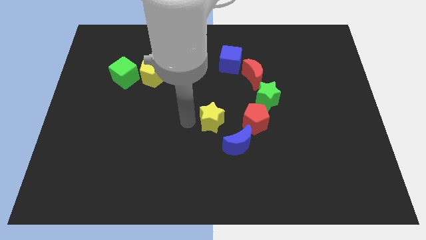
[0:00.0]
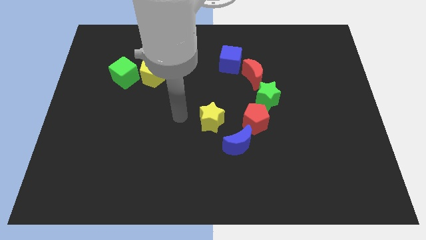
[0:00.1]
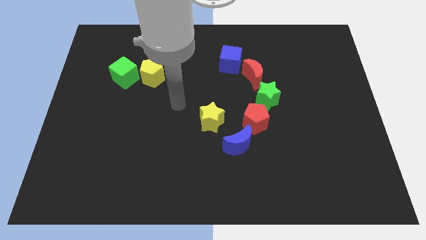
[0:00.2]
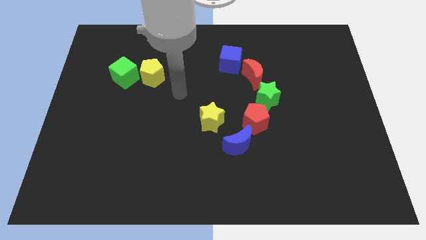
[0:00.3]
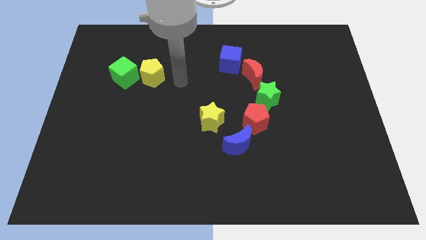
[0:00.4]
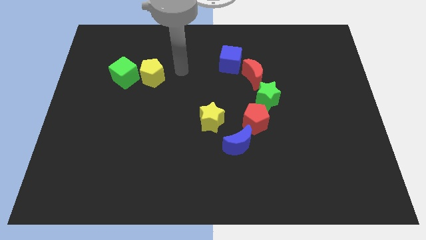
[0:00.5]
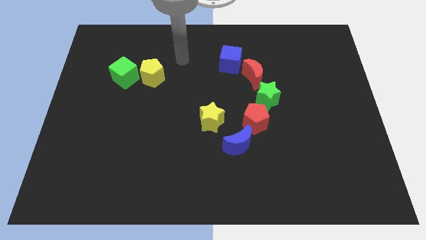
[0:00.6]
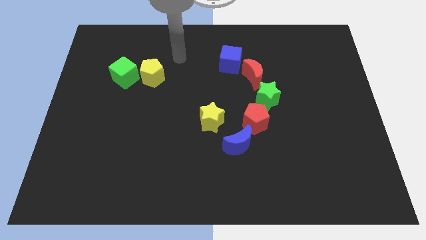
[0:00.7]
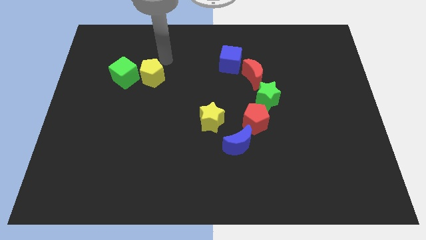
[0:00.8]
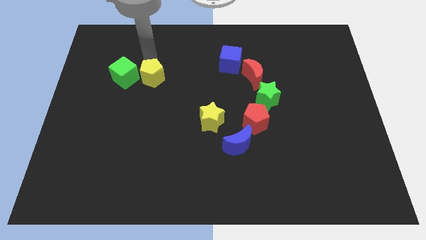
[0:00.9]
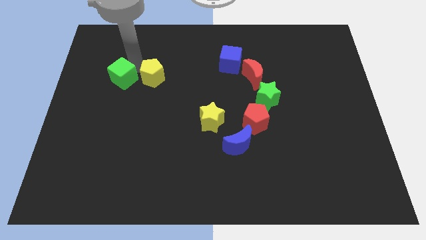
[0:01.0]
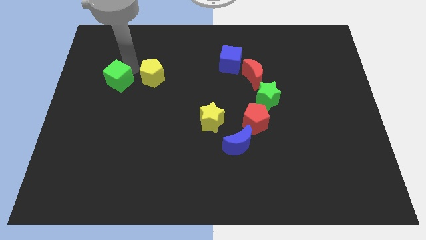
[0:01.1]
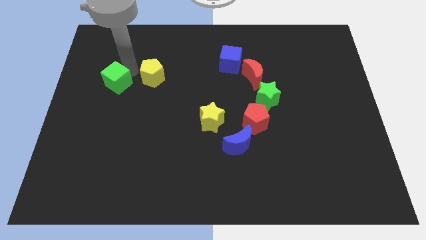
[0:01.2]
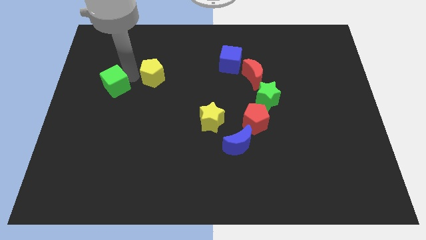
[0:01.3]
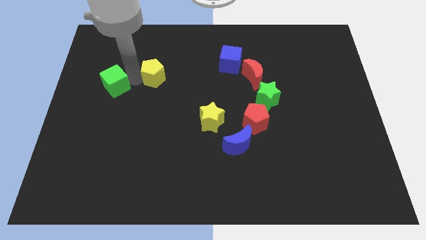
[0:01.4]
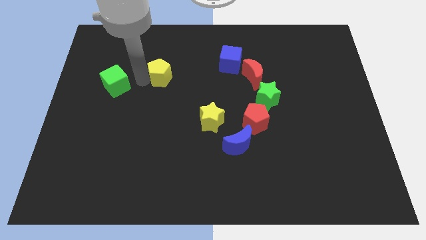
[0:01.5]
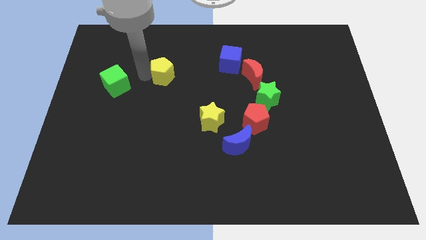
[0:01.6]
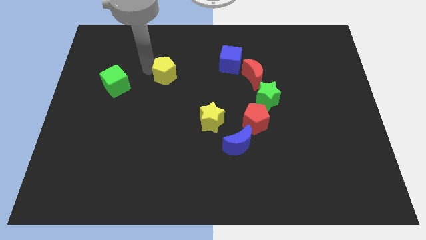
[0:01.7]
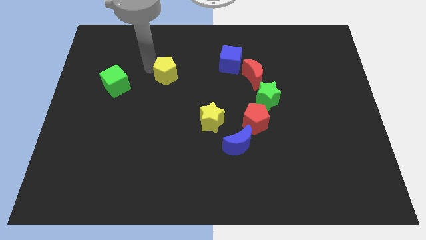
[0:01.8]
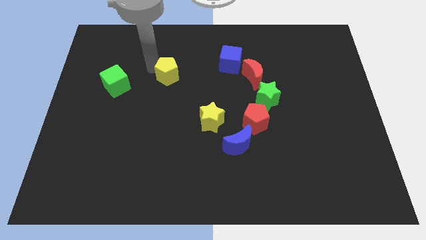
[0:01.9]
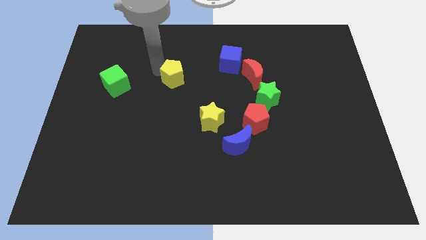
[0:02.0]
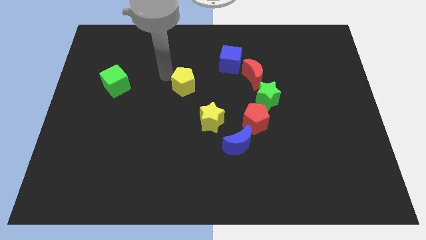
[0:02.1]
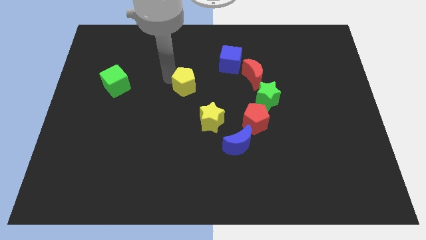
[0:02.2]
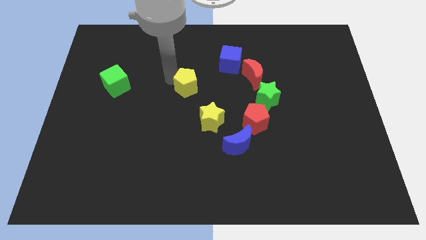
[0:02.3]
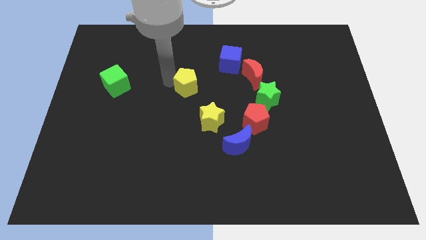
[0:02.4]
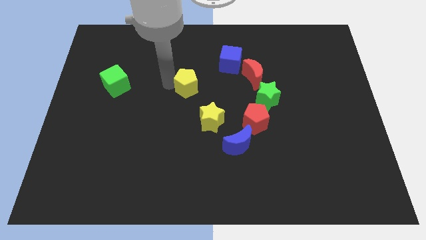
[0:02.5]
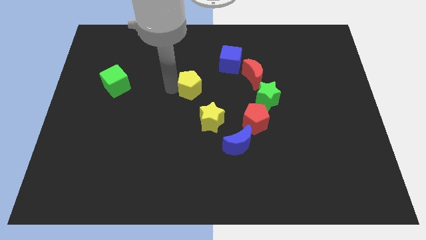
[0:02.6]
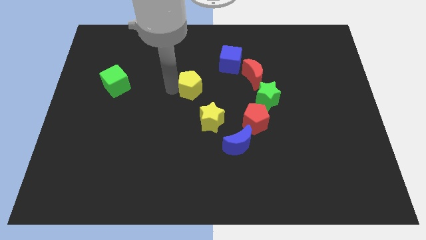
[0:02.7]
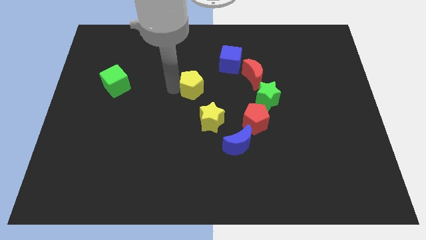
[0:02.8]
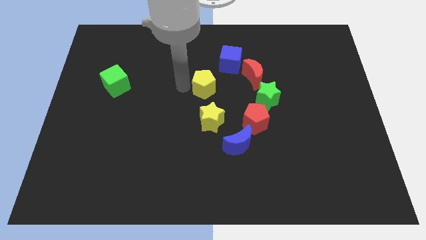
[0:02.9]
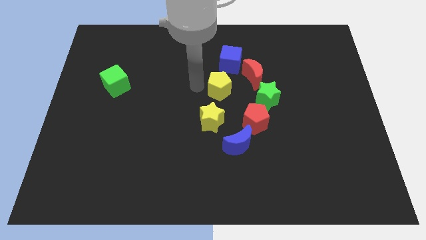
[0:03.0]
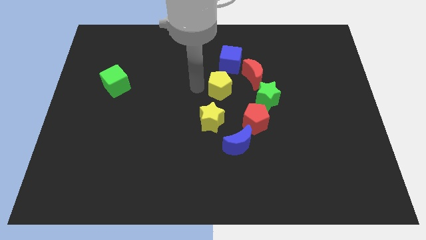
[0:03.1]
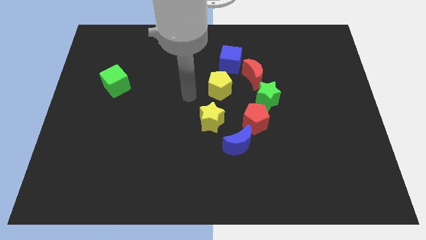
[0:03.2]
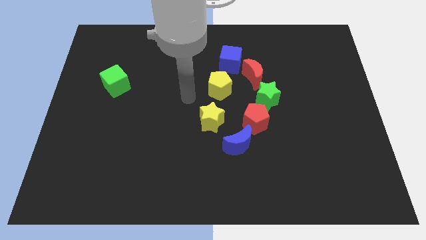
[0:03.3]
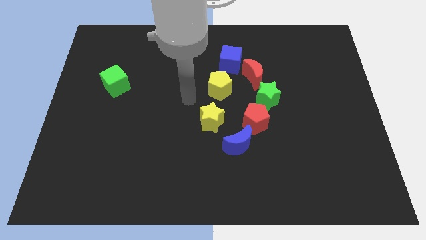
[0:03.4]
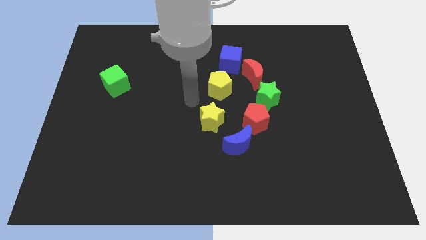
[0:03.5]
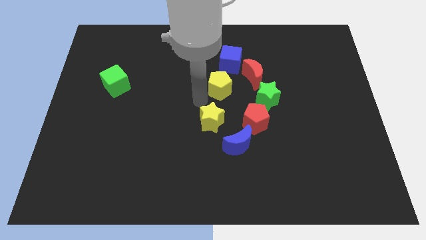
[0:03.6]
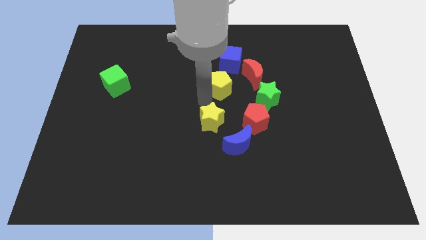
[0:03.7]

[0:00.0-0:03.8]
move the yellow pentagon to the top of the yellow star

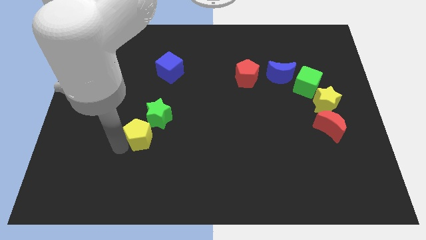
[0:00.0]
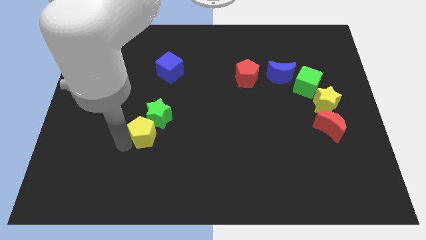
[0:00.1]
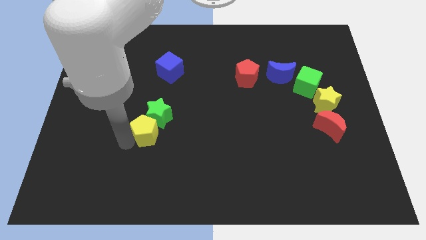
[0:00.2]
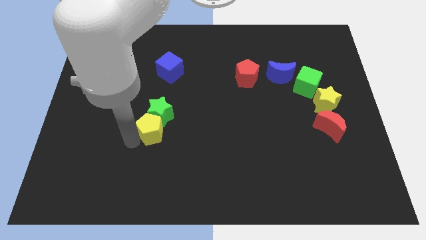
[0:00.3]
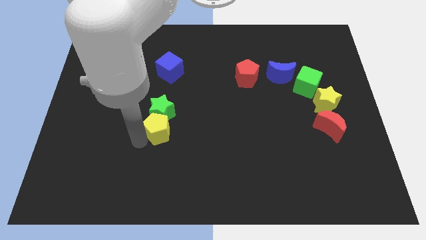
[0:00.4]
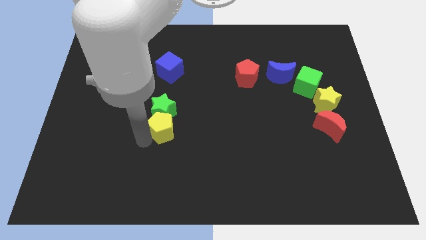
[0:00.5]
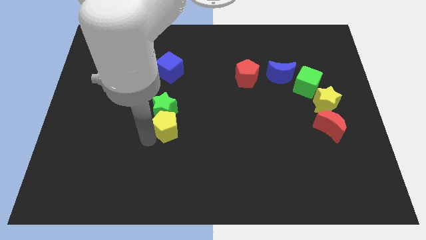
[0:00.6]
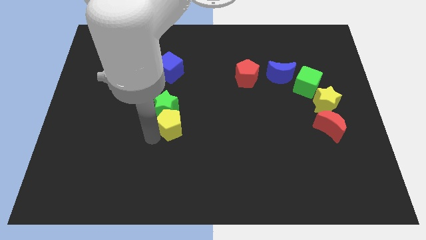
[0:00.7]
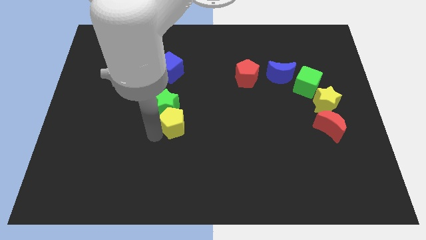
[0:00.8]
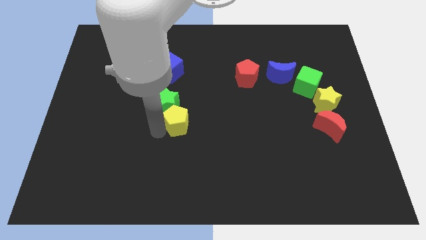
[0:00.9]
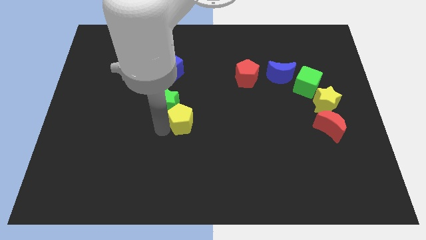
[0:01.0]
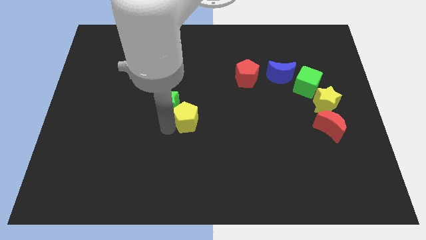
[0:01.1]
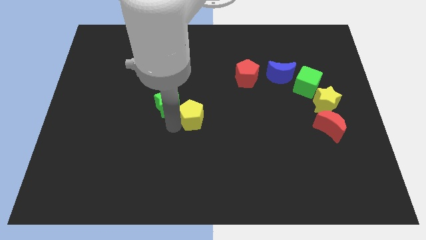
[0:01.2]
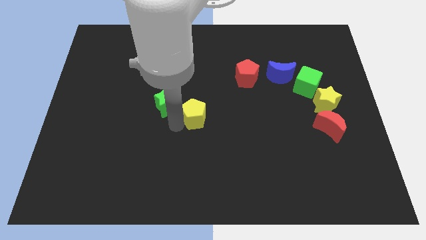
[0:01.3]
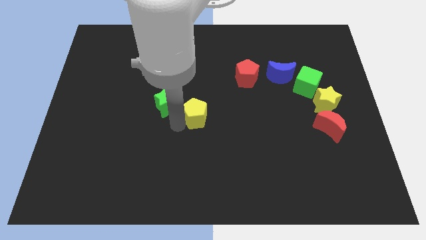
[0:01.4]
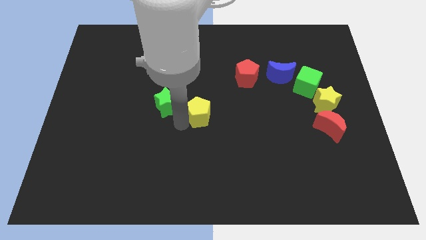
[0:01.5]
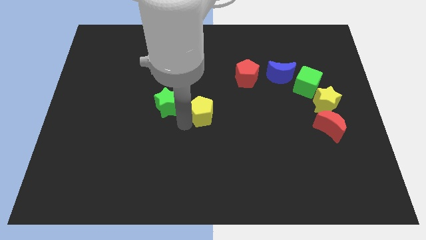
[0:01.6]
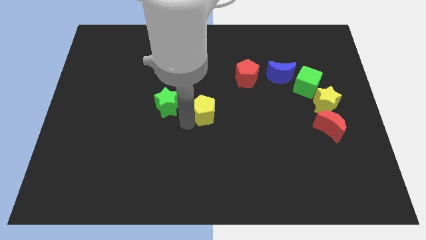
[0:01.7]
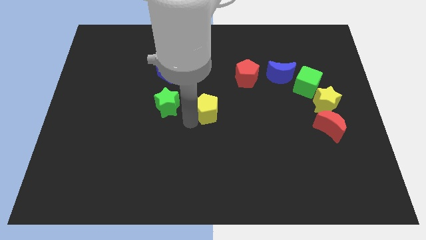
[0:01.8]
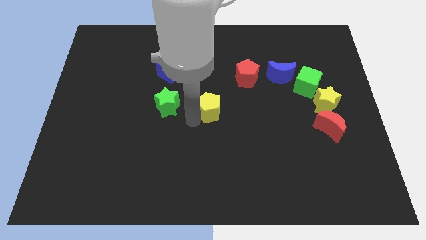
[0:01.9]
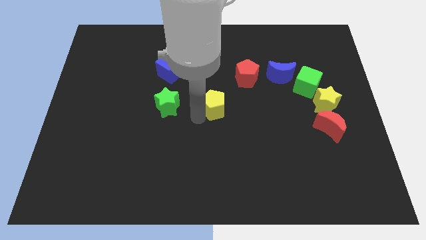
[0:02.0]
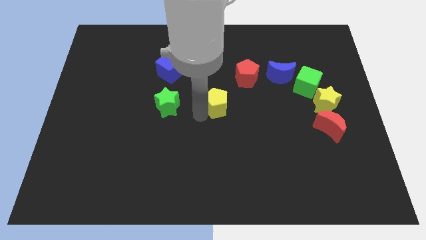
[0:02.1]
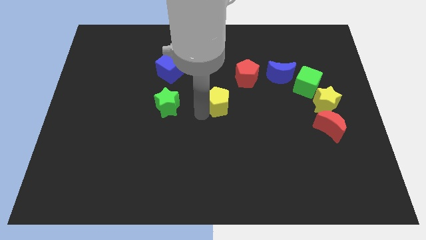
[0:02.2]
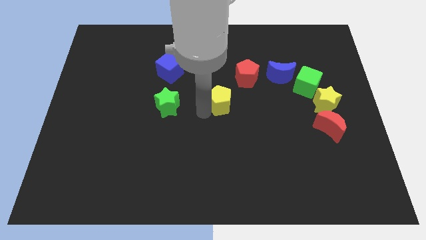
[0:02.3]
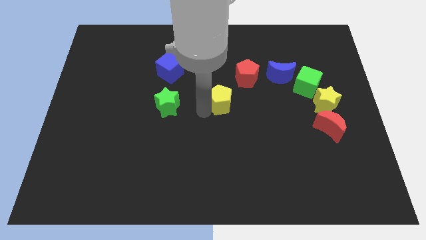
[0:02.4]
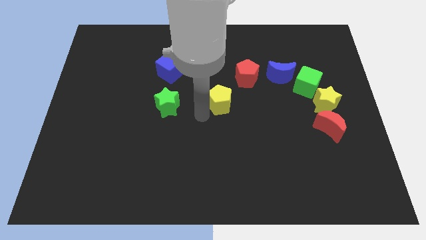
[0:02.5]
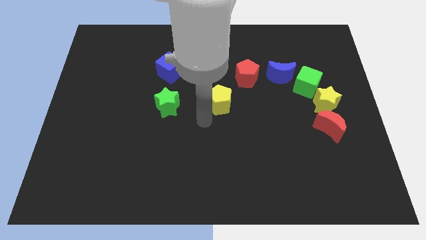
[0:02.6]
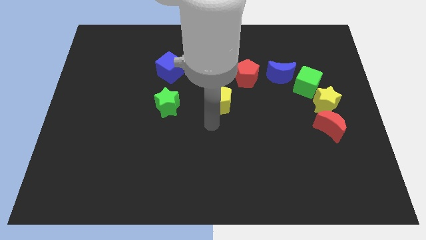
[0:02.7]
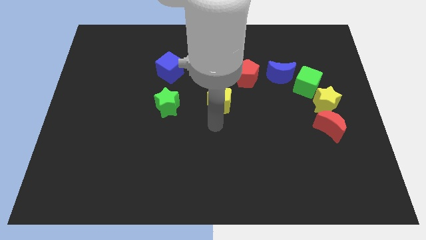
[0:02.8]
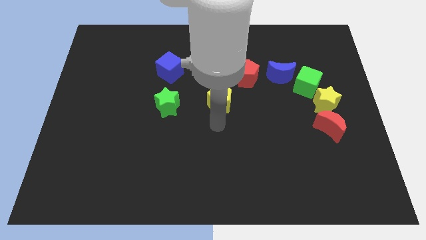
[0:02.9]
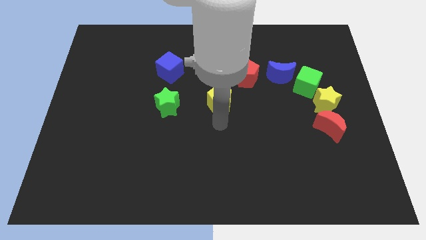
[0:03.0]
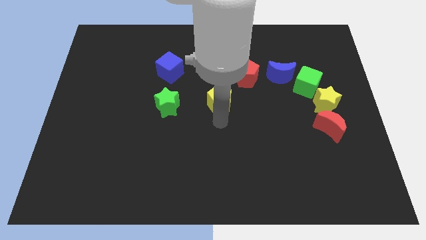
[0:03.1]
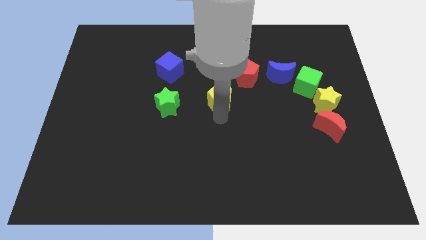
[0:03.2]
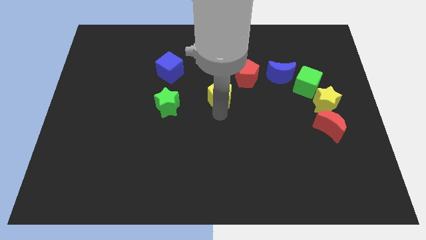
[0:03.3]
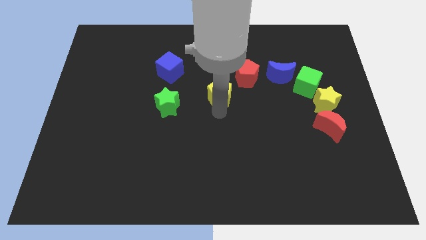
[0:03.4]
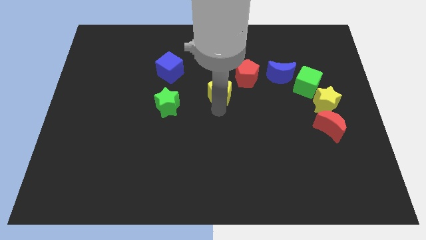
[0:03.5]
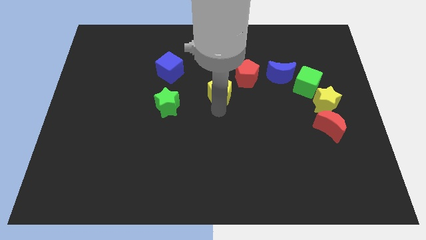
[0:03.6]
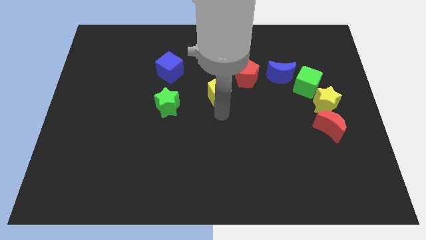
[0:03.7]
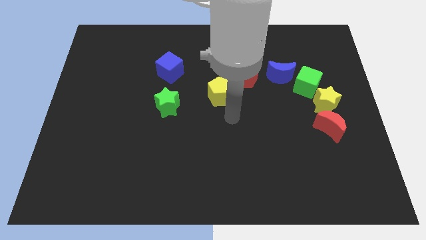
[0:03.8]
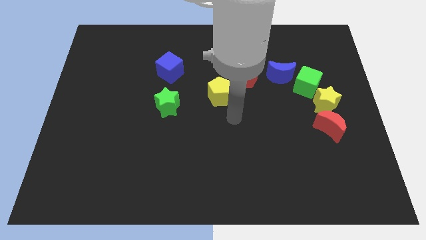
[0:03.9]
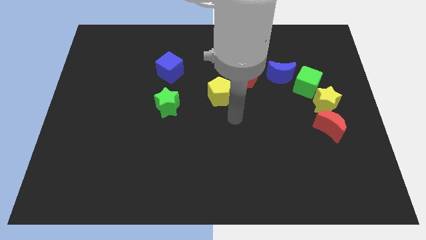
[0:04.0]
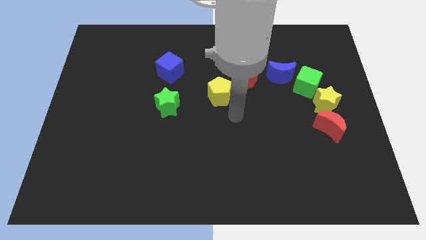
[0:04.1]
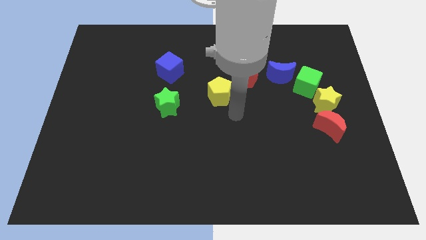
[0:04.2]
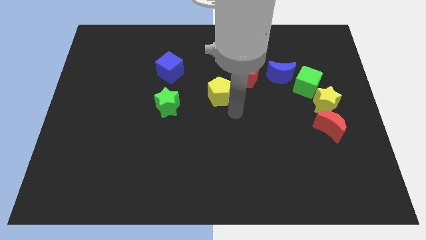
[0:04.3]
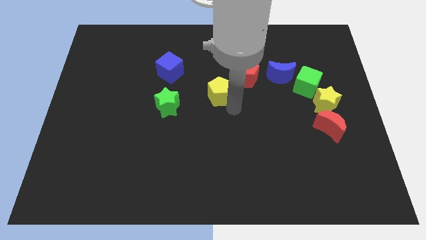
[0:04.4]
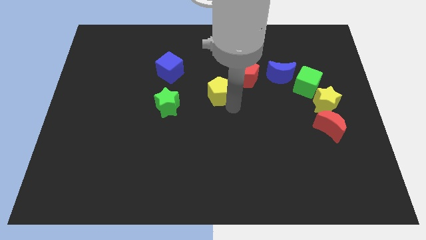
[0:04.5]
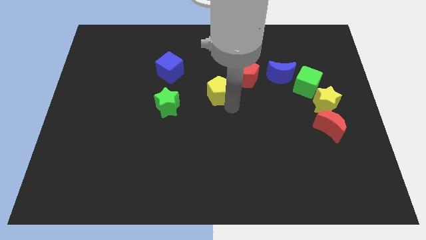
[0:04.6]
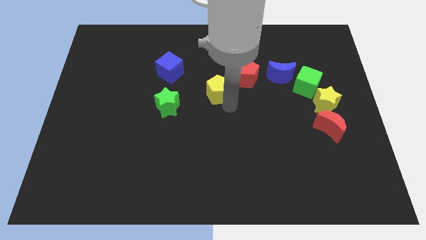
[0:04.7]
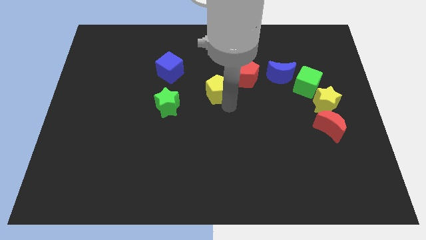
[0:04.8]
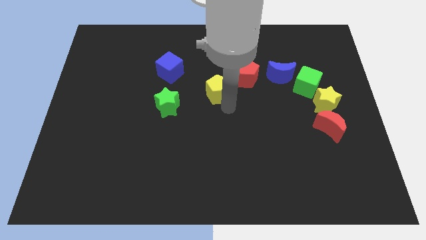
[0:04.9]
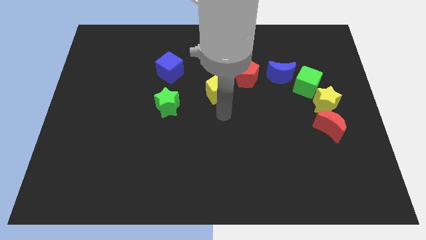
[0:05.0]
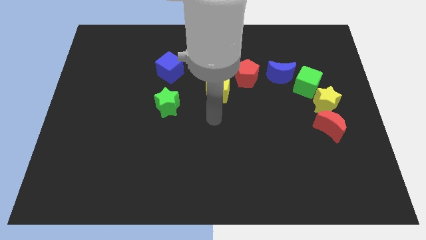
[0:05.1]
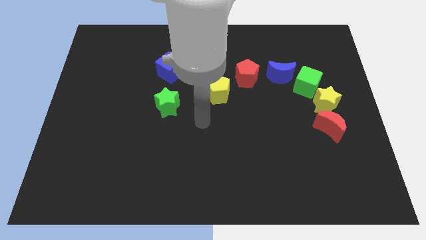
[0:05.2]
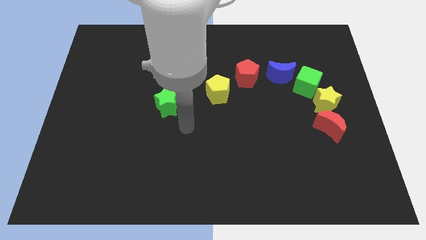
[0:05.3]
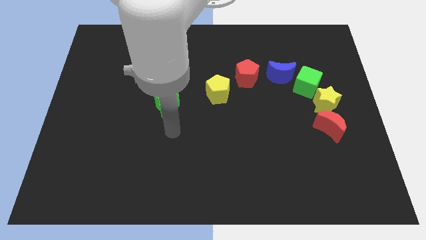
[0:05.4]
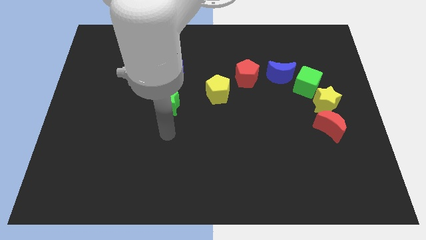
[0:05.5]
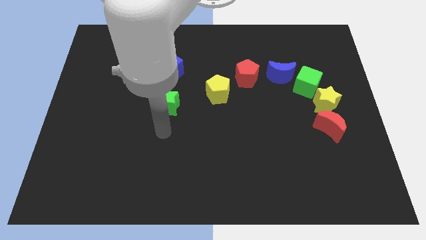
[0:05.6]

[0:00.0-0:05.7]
place the yellow pentagon next to the red pentagon
